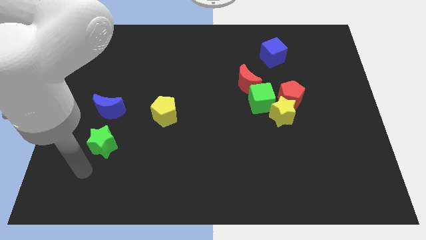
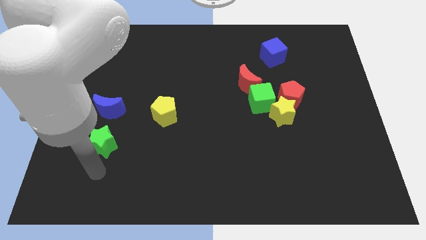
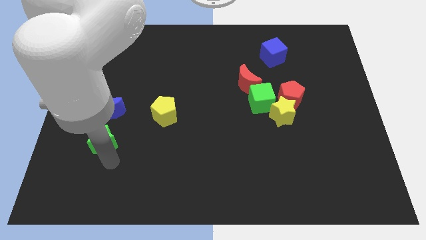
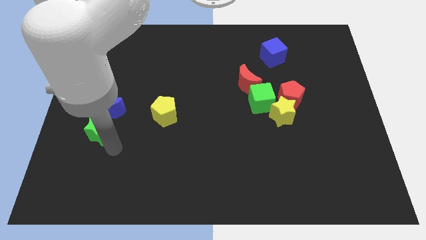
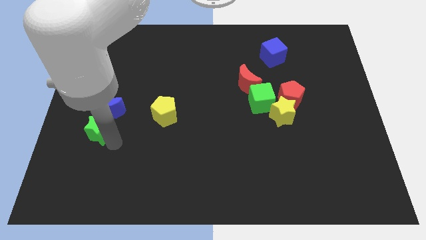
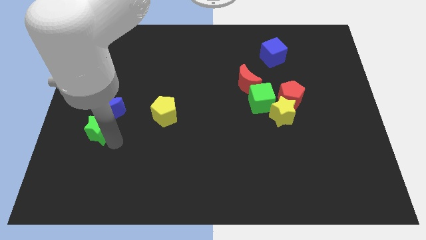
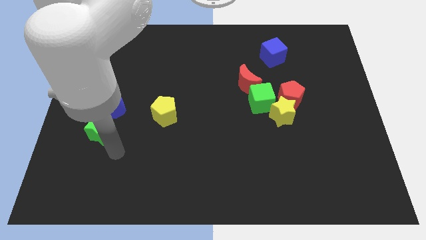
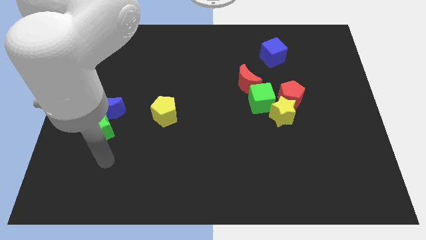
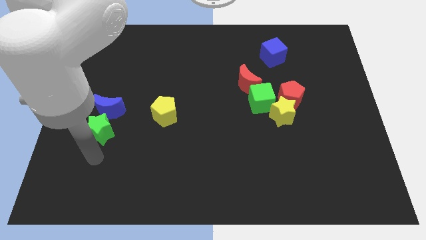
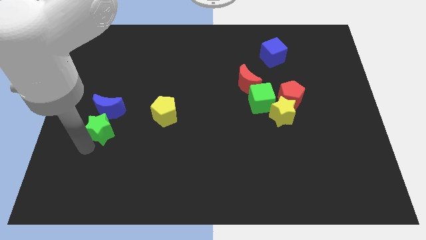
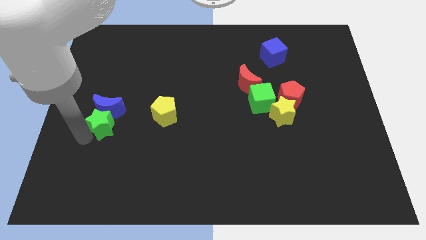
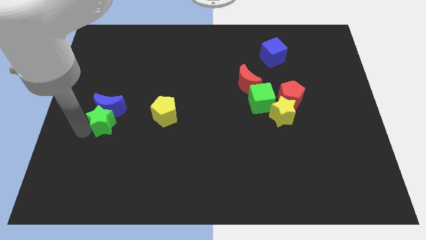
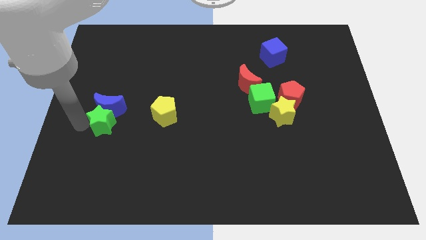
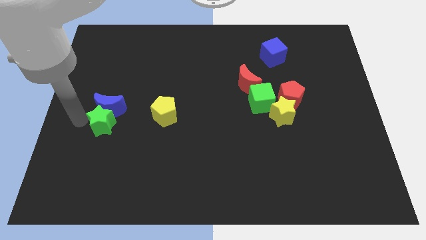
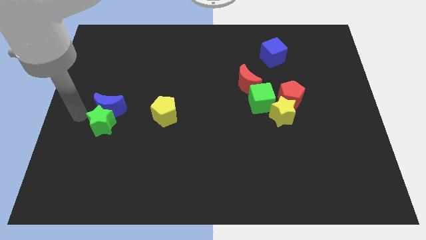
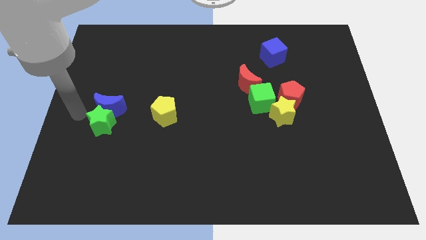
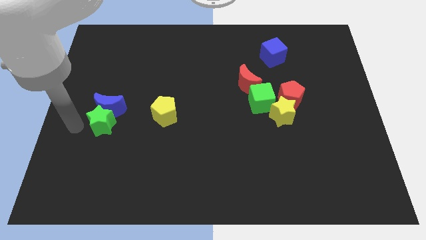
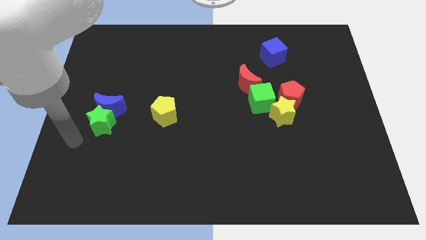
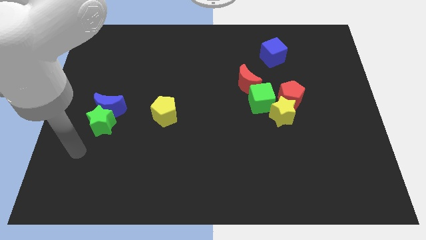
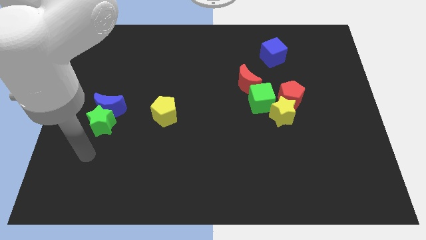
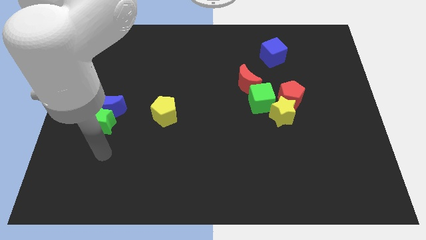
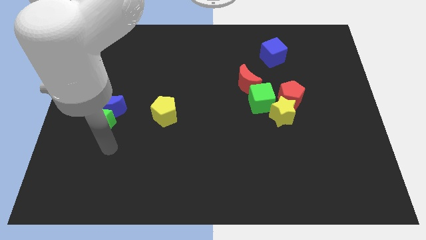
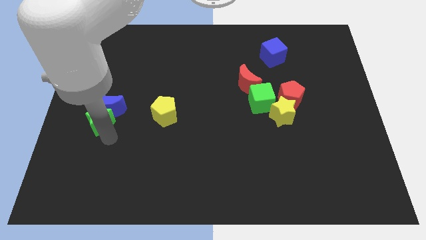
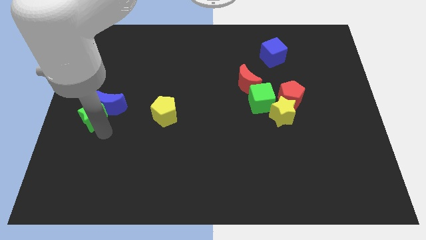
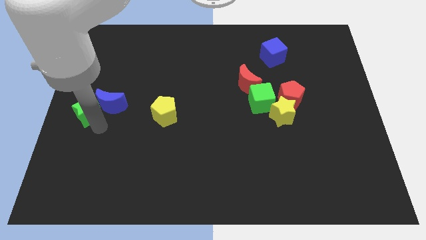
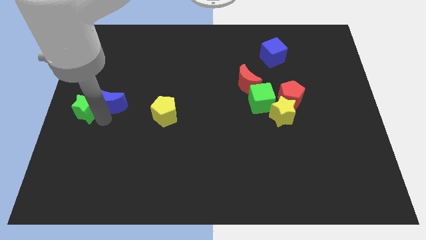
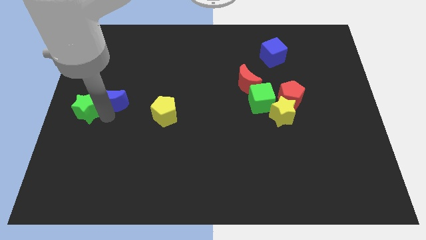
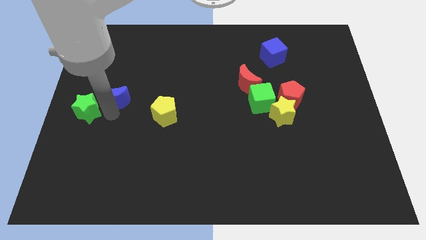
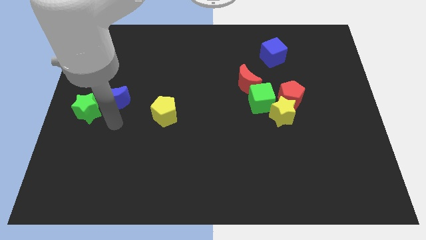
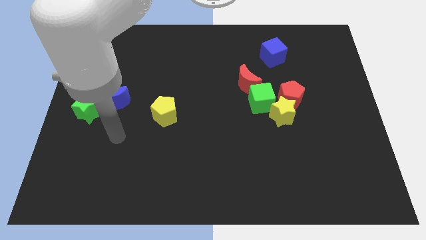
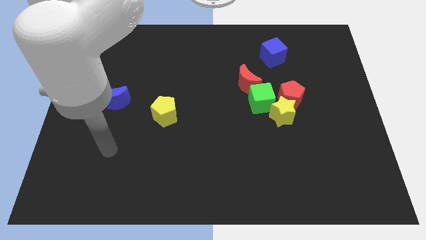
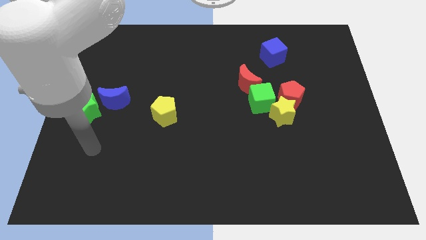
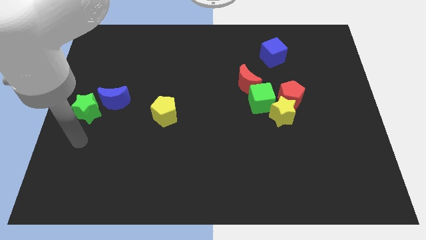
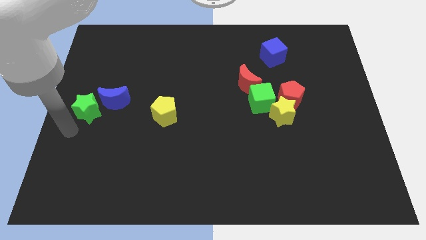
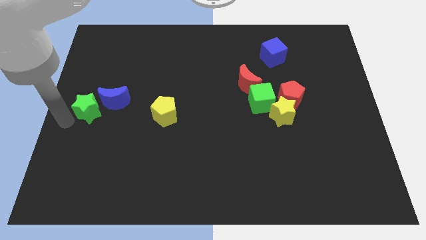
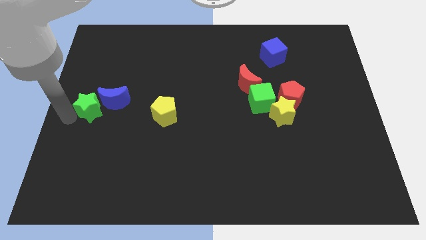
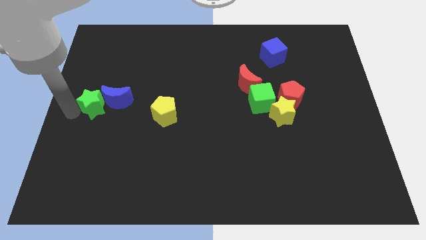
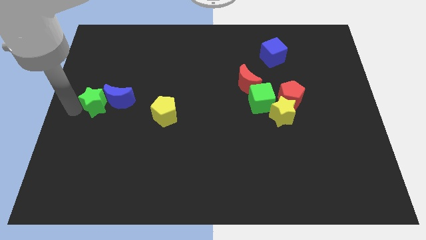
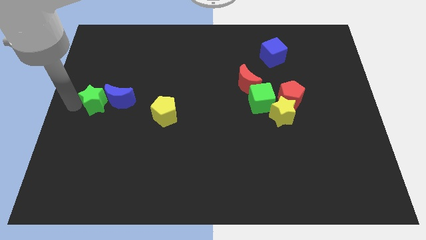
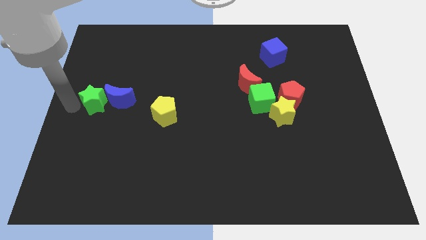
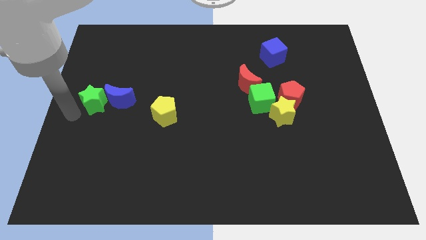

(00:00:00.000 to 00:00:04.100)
move green star to the left of blue moon

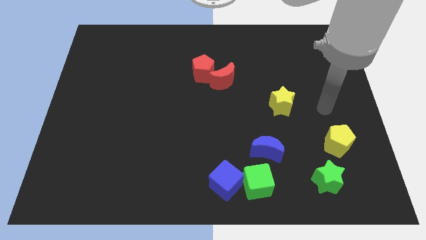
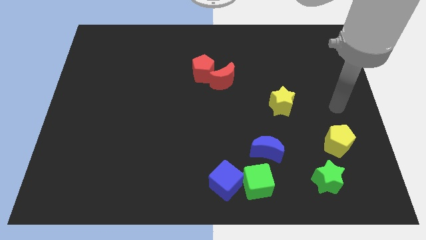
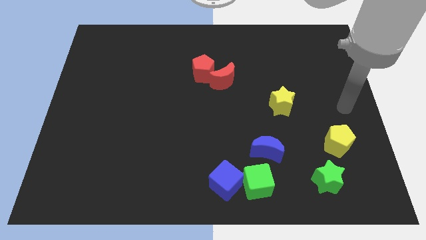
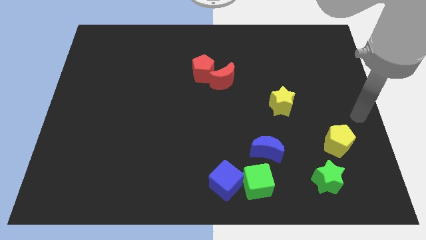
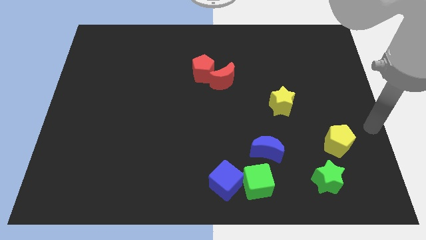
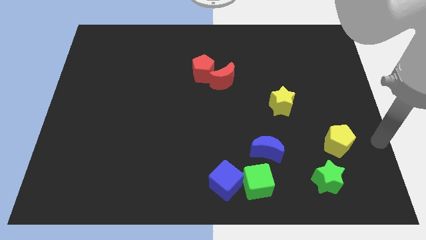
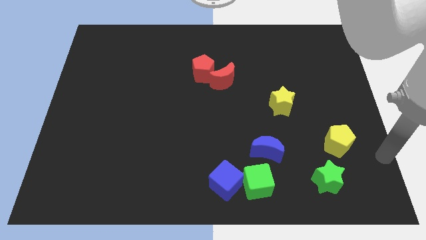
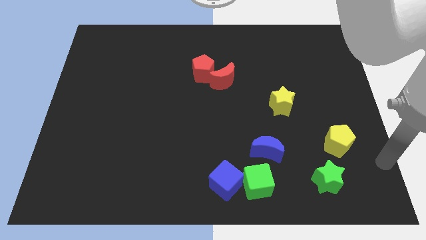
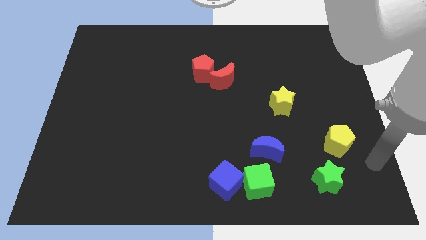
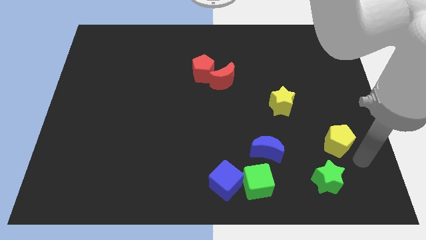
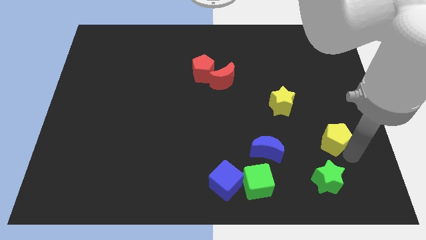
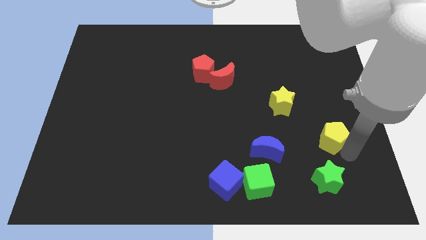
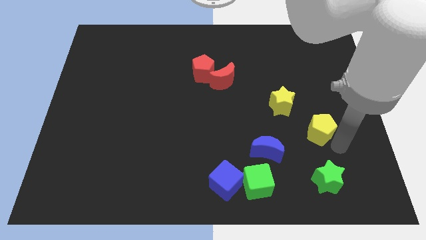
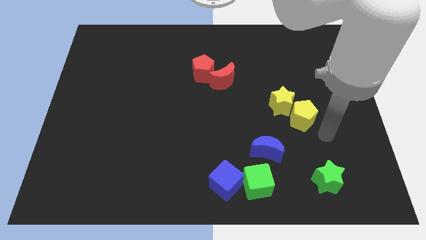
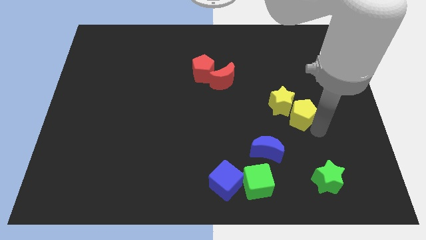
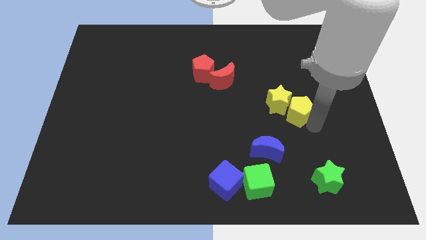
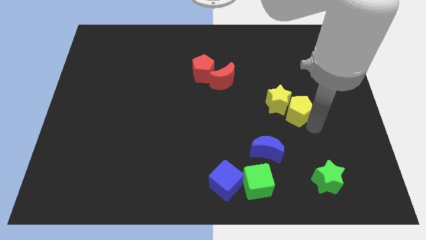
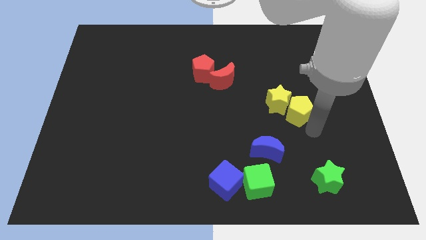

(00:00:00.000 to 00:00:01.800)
push the yellow pentagon into the yellow star

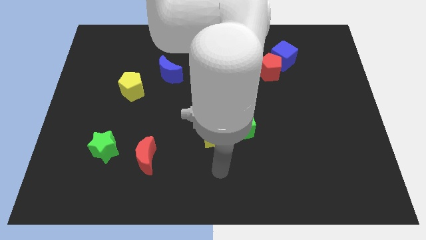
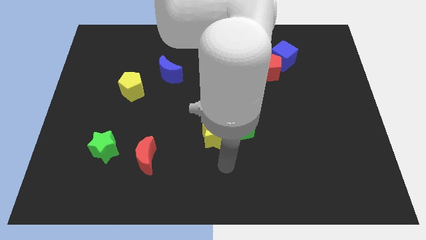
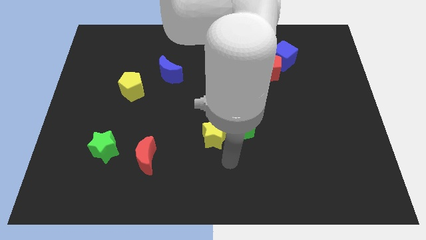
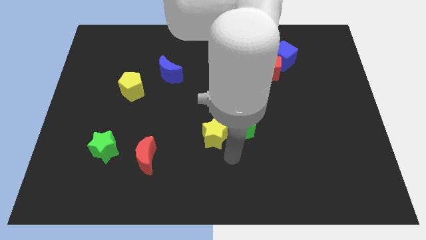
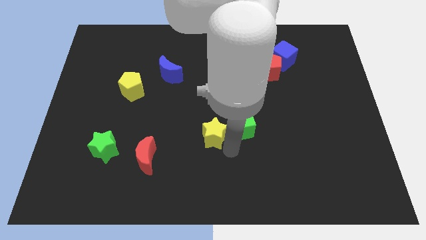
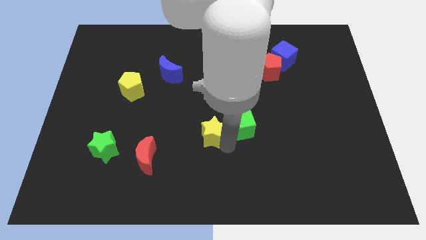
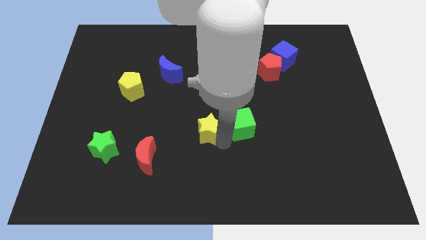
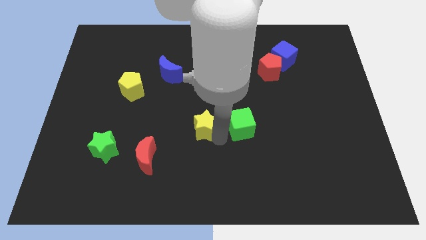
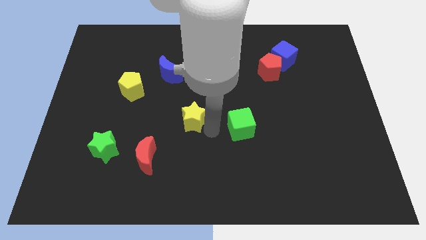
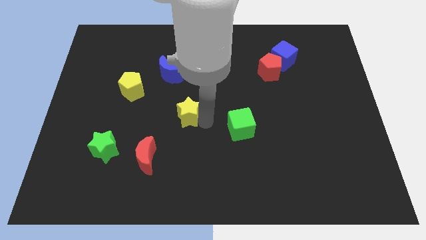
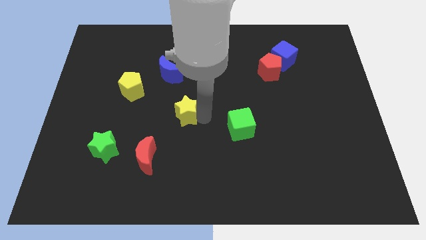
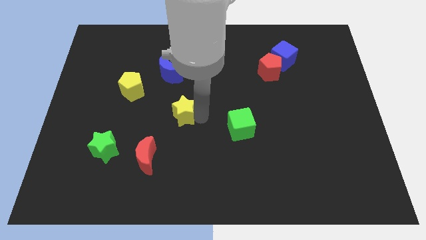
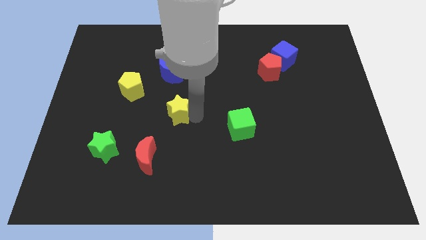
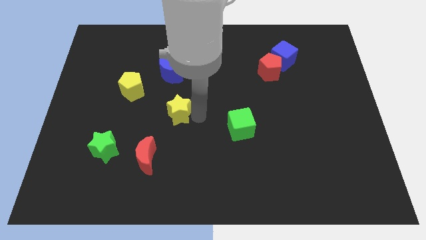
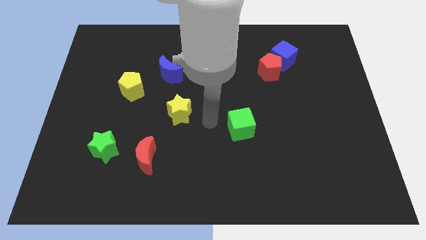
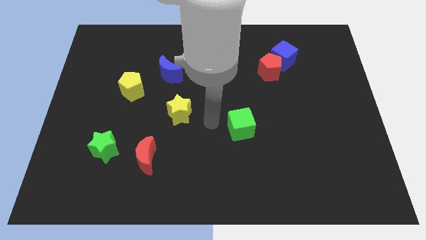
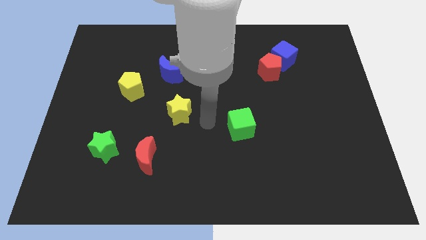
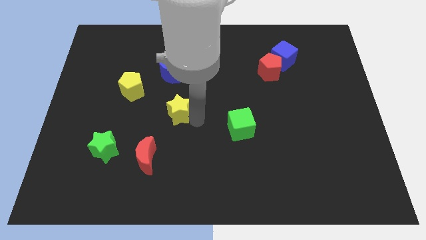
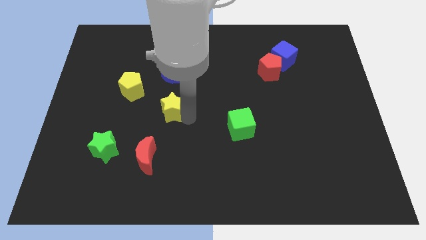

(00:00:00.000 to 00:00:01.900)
push the yellow star to the bottom of the blue crescent

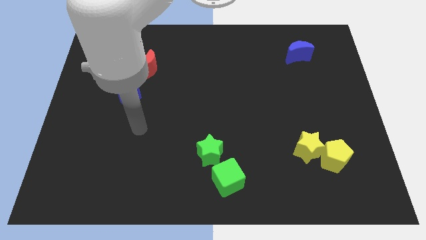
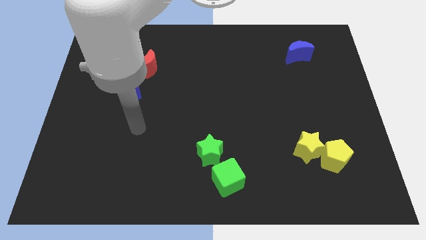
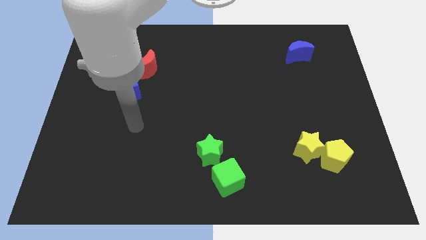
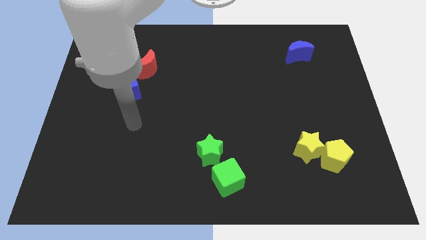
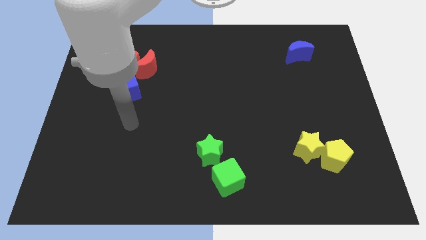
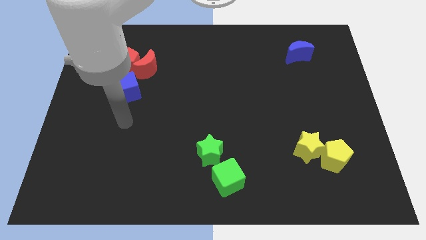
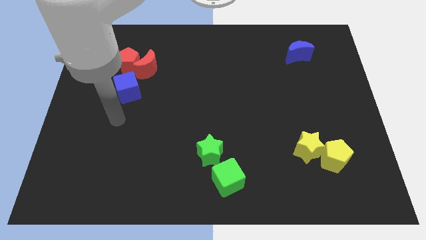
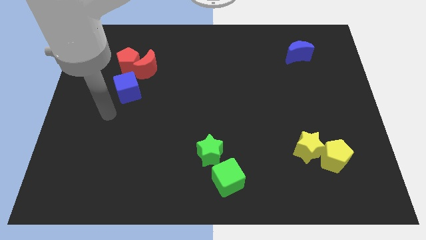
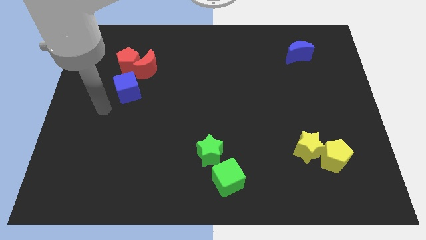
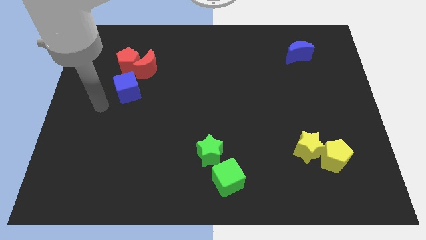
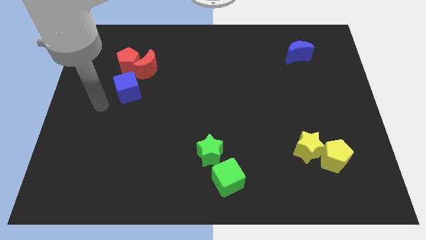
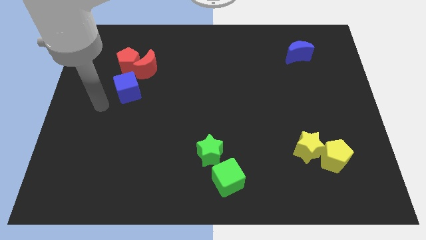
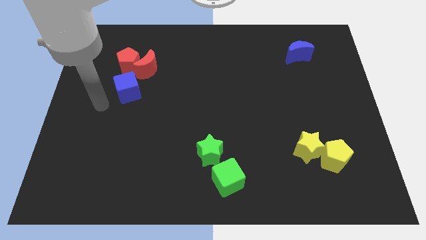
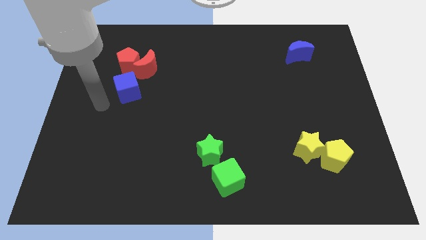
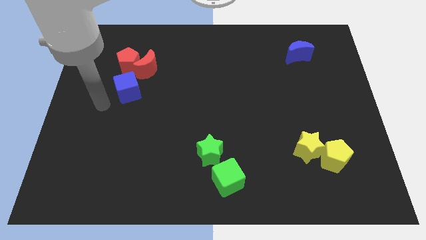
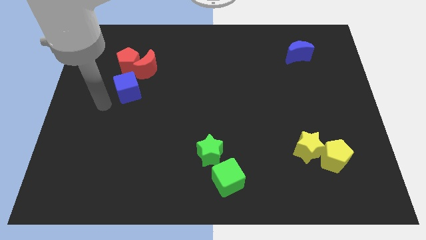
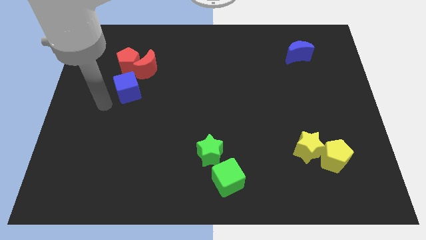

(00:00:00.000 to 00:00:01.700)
move your arm to the left of the blue cube
